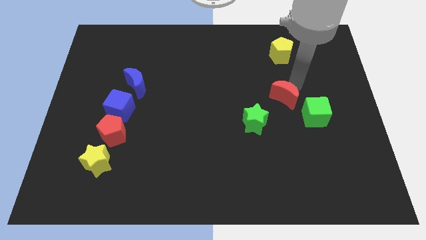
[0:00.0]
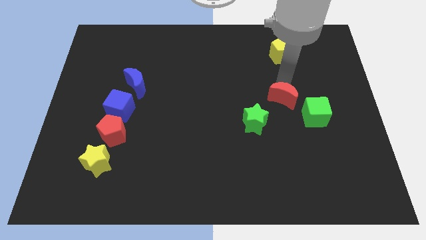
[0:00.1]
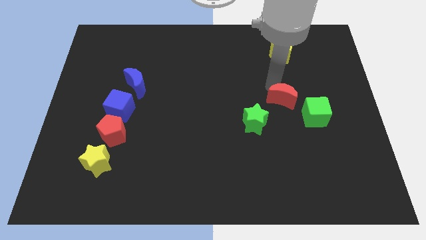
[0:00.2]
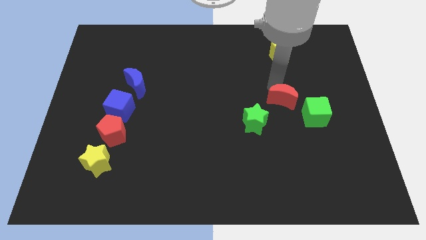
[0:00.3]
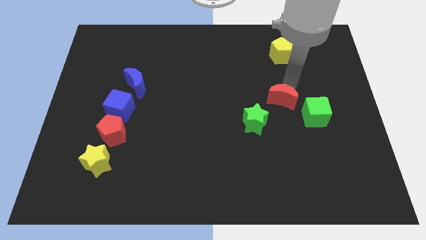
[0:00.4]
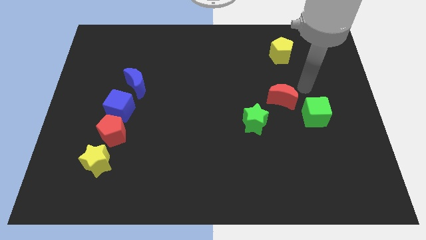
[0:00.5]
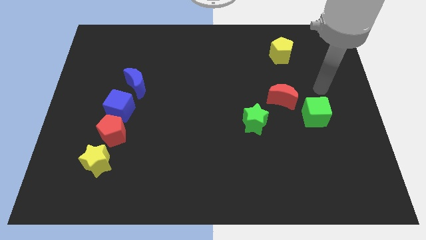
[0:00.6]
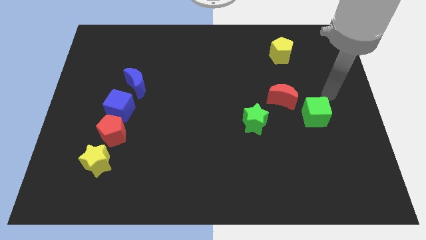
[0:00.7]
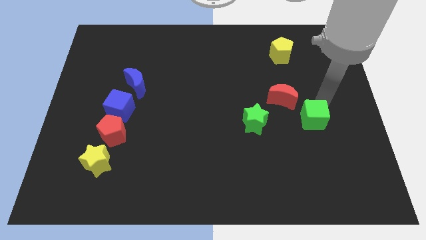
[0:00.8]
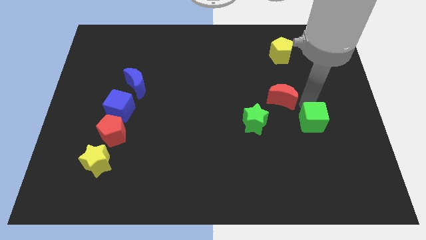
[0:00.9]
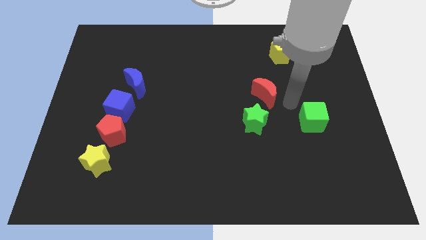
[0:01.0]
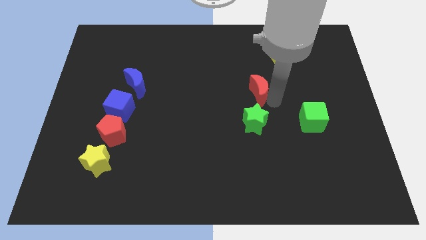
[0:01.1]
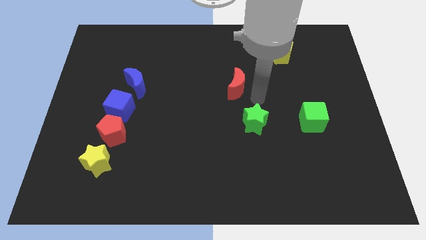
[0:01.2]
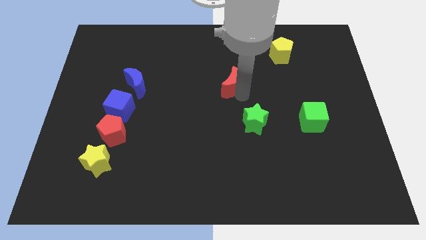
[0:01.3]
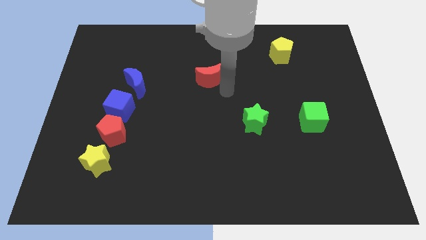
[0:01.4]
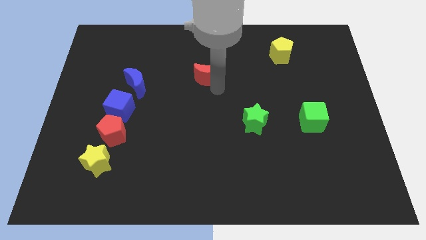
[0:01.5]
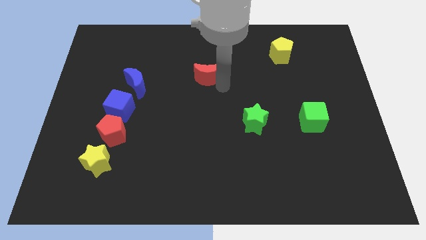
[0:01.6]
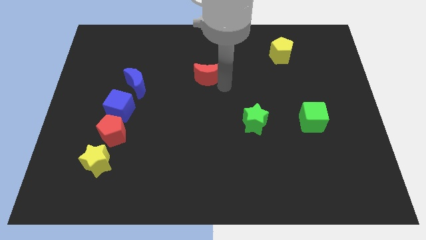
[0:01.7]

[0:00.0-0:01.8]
push the red moon towards the top center of the board

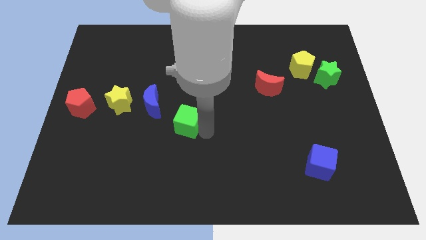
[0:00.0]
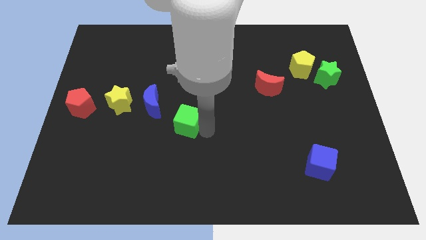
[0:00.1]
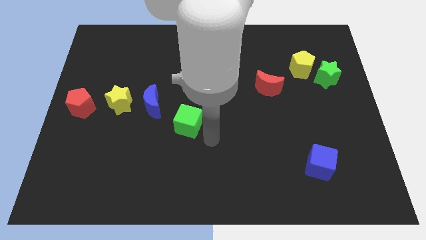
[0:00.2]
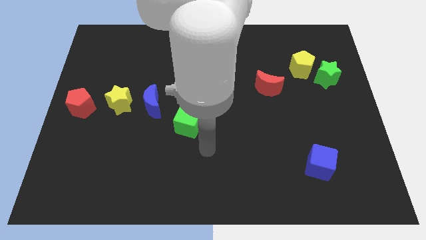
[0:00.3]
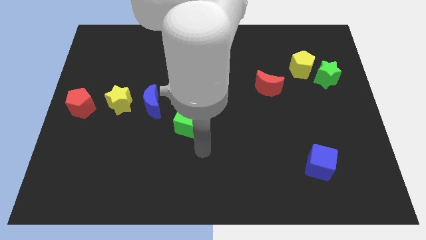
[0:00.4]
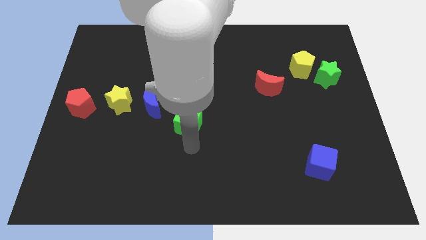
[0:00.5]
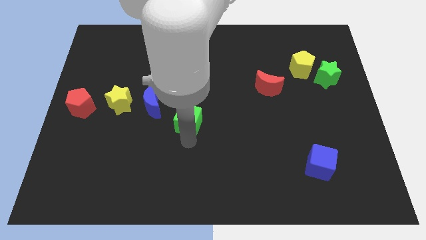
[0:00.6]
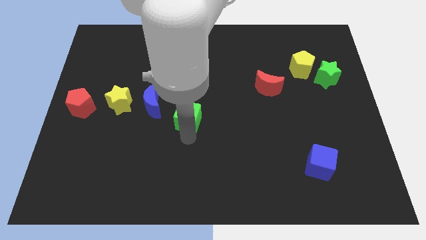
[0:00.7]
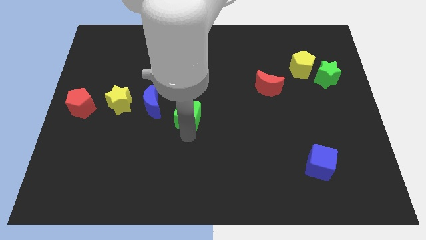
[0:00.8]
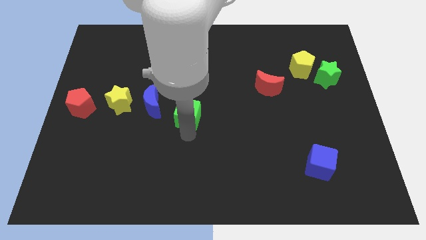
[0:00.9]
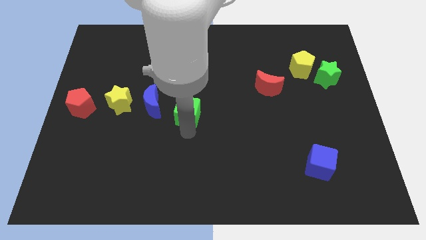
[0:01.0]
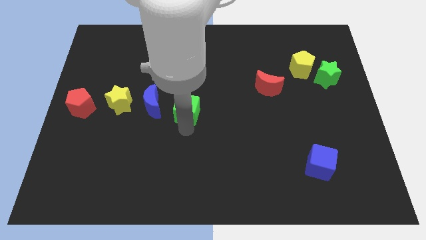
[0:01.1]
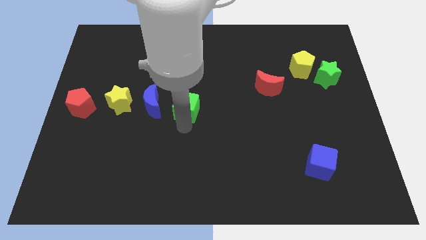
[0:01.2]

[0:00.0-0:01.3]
place the green cube to the right side of the blue moon

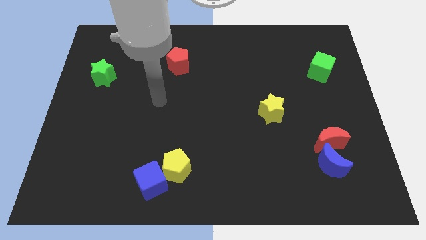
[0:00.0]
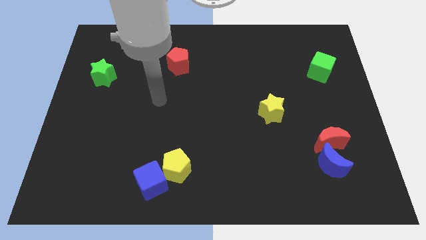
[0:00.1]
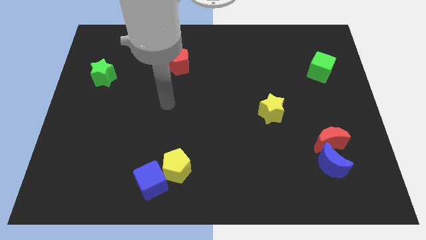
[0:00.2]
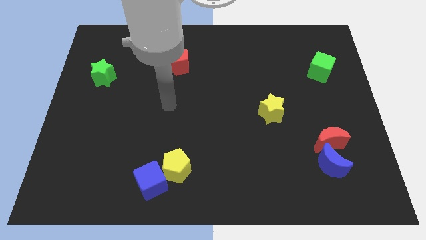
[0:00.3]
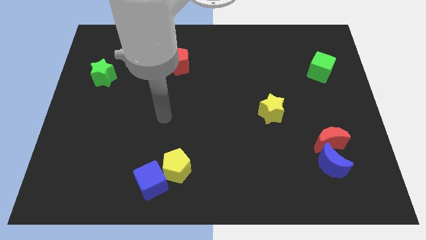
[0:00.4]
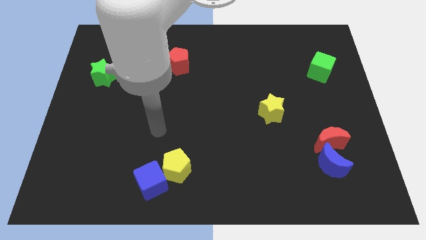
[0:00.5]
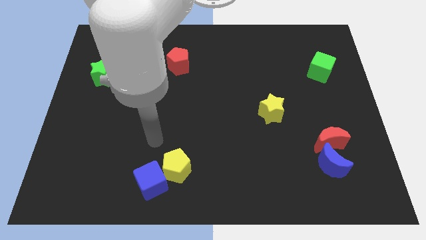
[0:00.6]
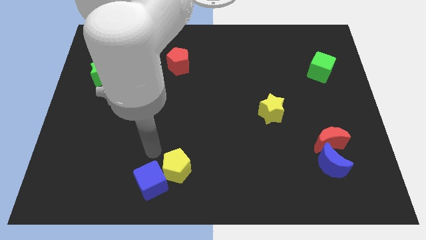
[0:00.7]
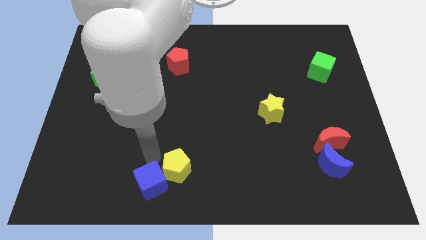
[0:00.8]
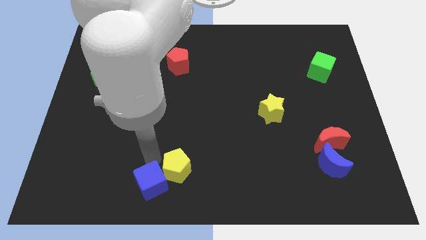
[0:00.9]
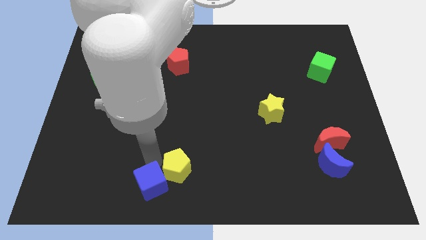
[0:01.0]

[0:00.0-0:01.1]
move your hand towards the blue cube

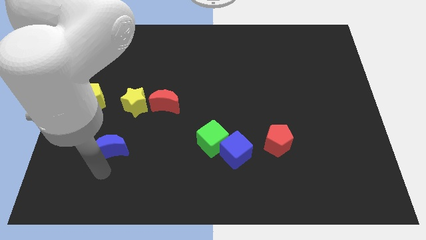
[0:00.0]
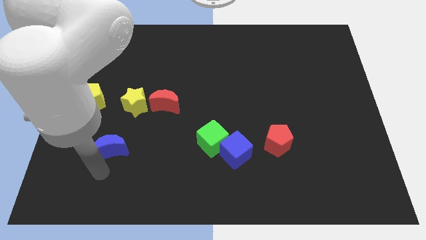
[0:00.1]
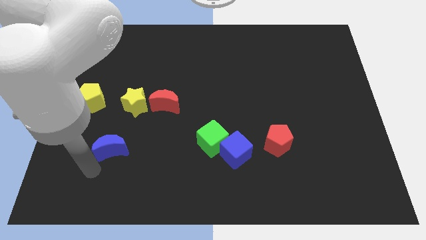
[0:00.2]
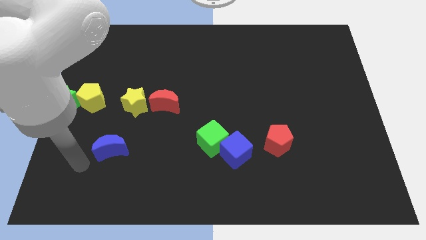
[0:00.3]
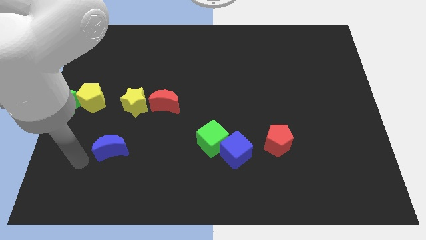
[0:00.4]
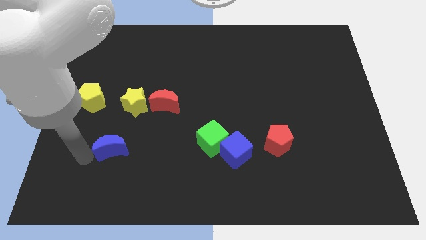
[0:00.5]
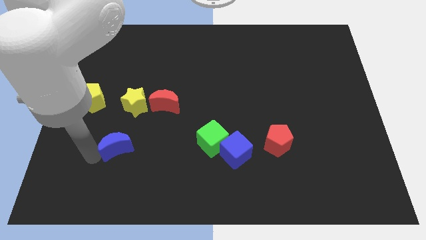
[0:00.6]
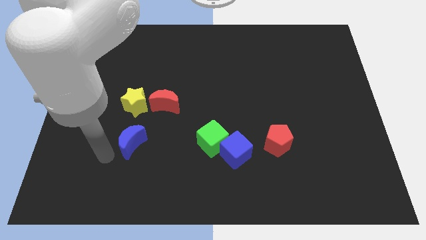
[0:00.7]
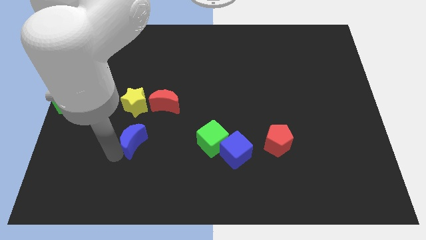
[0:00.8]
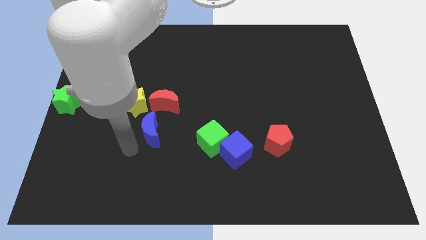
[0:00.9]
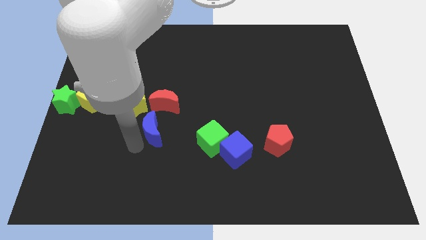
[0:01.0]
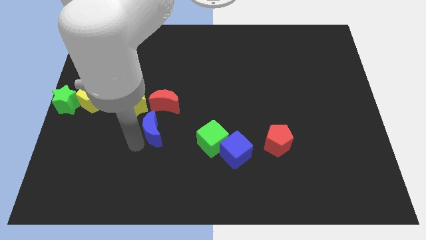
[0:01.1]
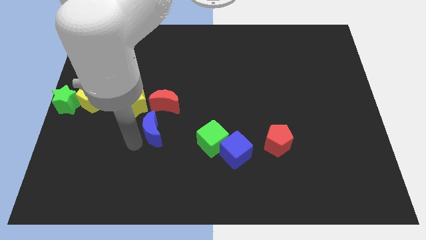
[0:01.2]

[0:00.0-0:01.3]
move blue crescent on the bottom left side of the red crescent

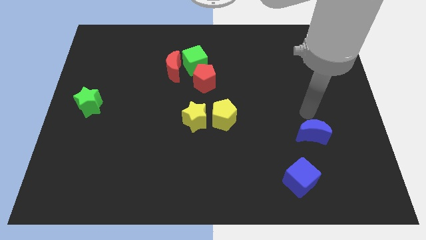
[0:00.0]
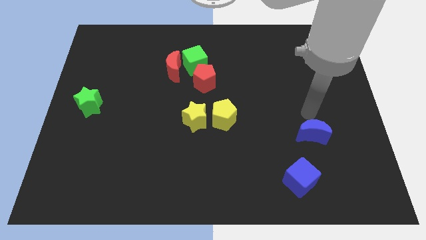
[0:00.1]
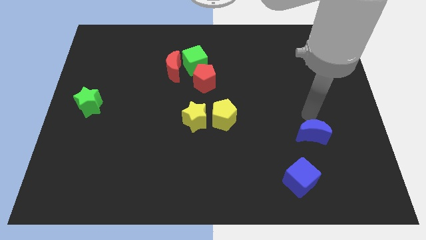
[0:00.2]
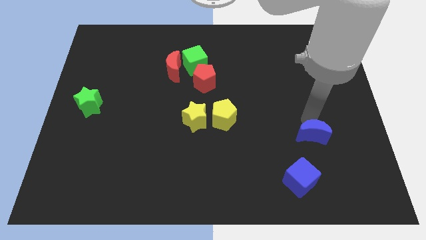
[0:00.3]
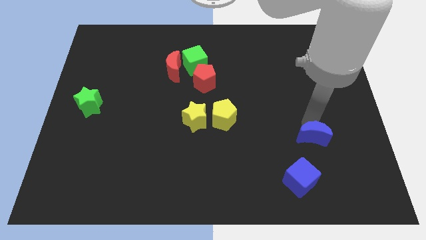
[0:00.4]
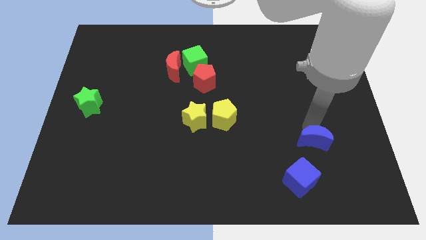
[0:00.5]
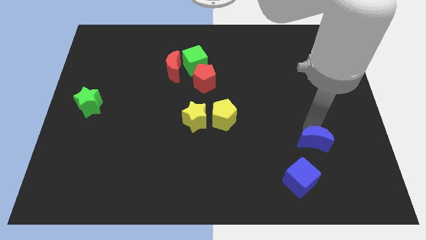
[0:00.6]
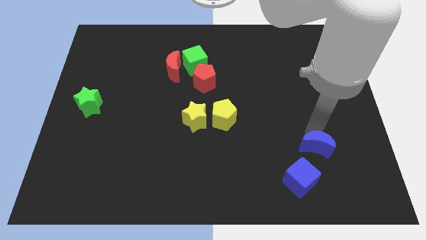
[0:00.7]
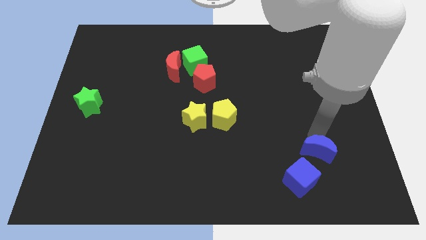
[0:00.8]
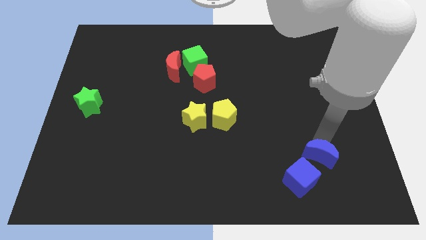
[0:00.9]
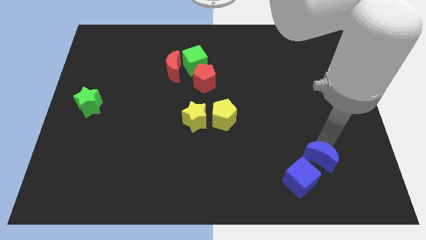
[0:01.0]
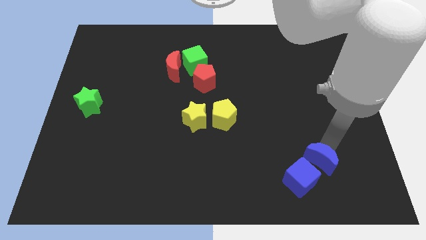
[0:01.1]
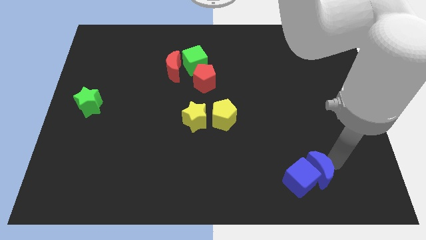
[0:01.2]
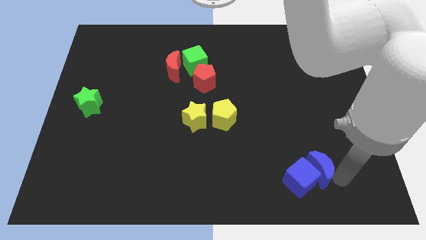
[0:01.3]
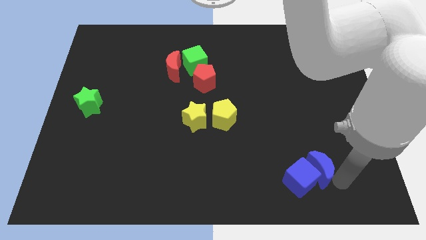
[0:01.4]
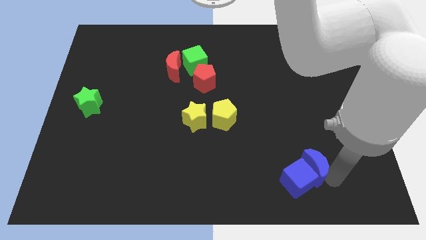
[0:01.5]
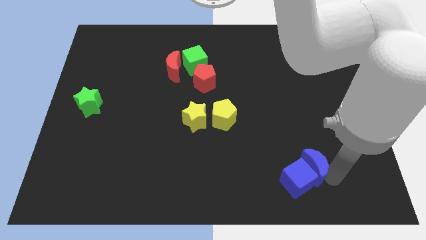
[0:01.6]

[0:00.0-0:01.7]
move the blue moon to the blue cube

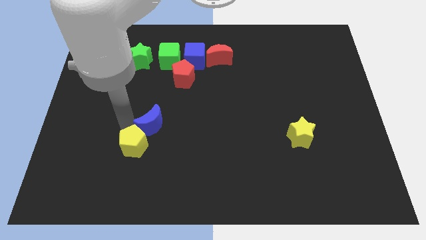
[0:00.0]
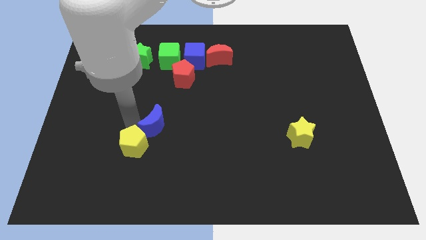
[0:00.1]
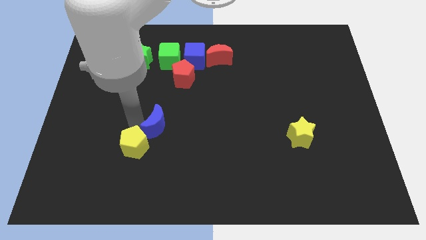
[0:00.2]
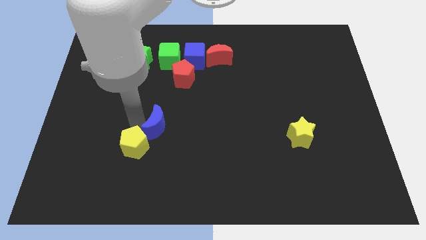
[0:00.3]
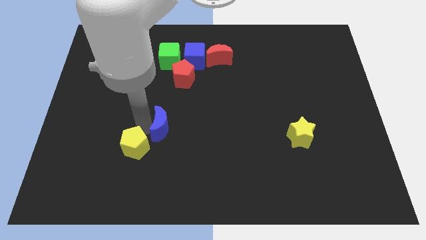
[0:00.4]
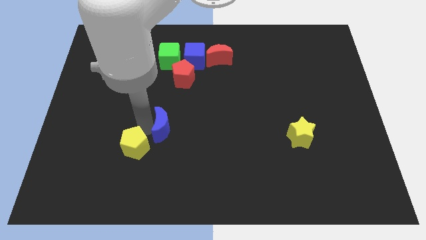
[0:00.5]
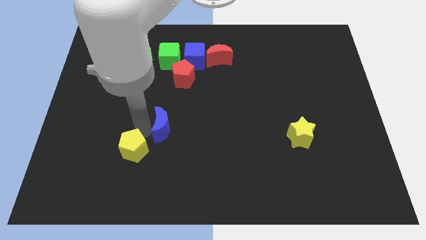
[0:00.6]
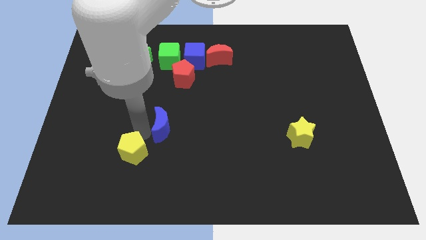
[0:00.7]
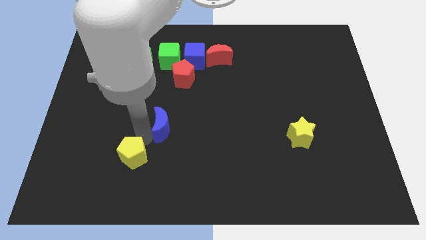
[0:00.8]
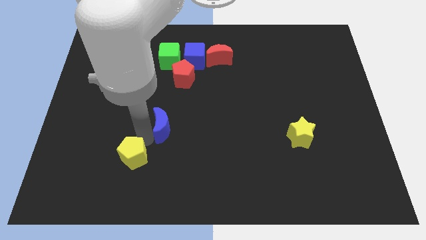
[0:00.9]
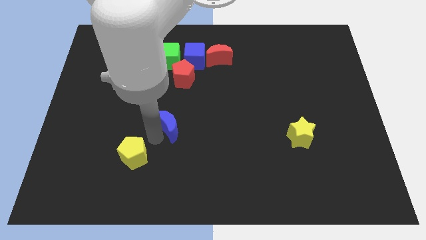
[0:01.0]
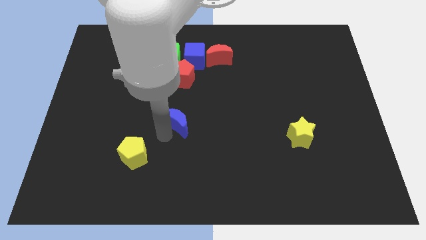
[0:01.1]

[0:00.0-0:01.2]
separate the blue crescent from the yellow pentagon

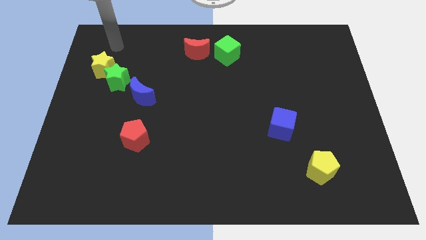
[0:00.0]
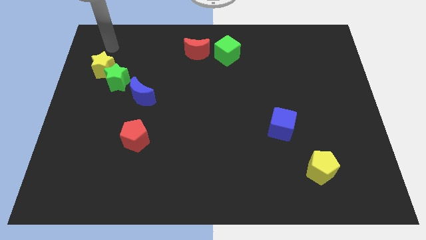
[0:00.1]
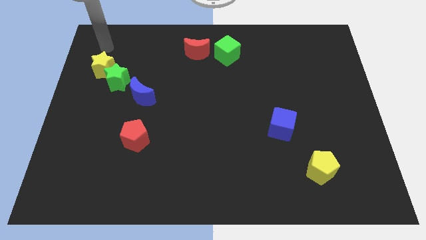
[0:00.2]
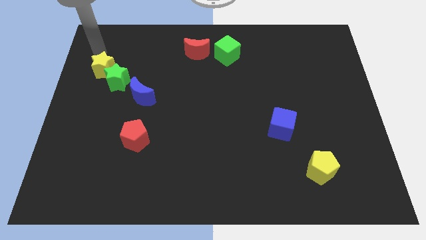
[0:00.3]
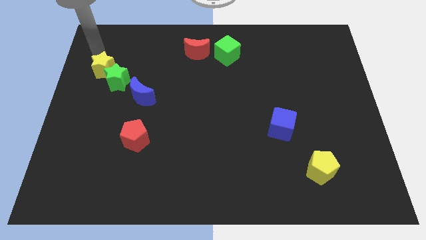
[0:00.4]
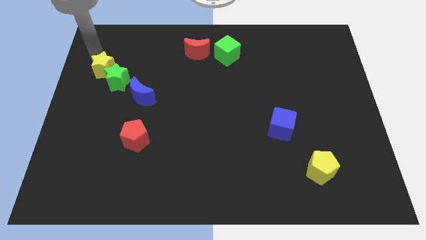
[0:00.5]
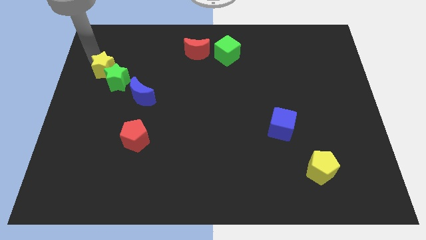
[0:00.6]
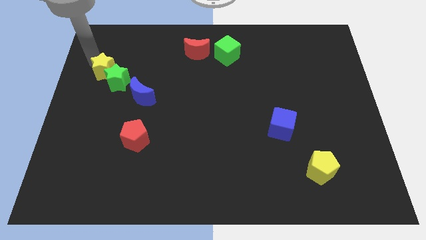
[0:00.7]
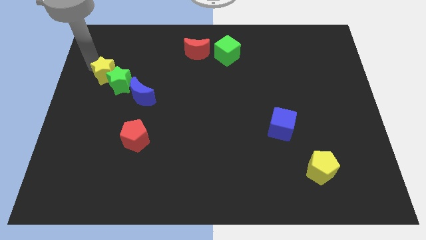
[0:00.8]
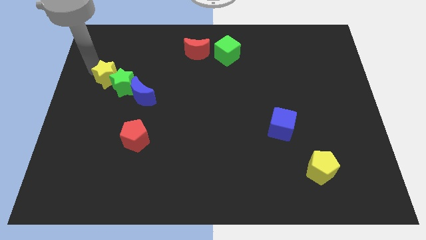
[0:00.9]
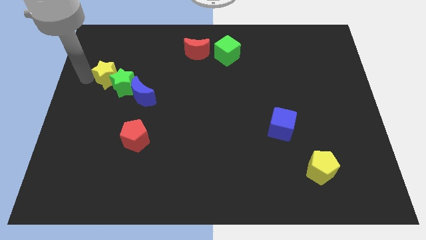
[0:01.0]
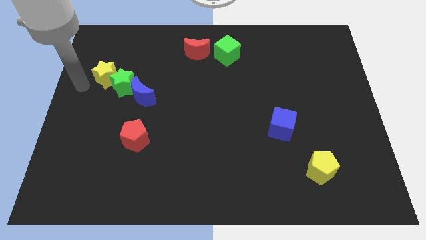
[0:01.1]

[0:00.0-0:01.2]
push the green star using the yellow star
